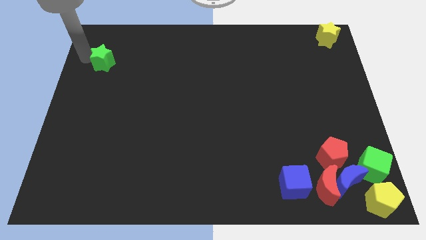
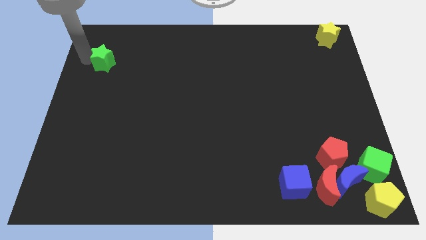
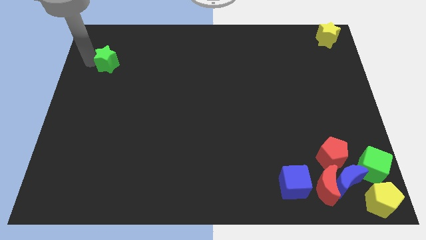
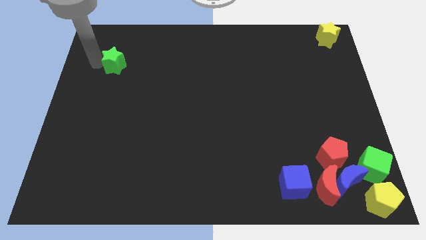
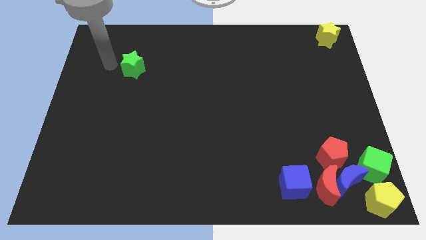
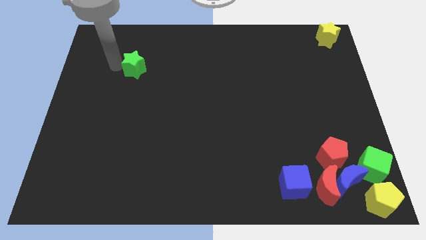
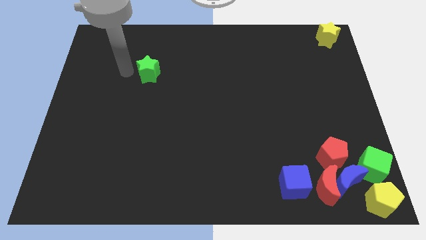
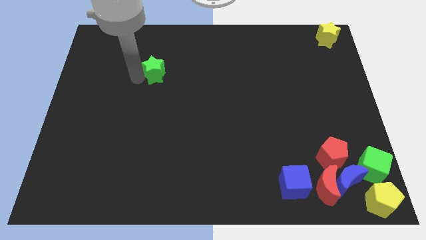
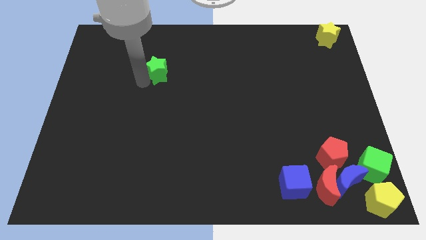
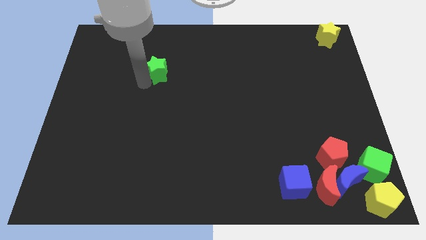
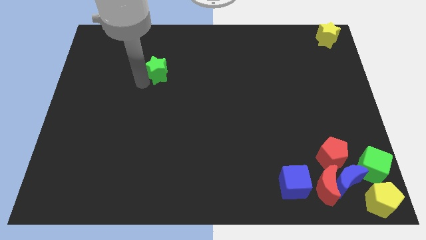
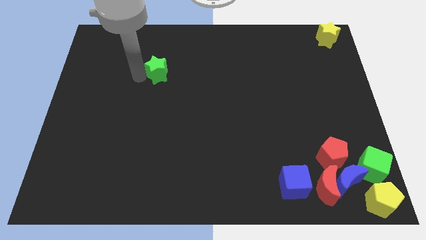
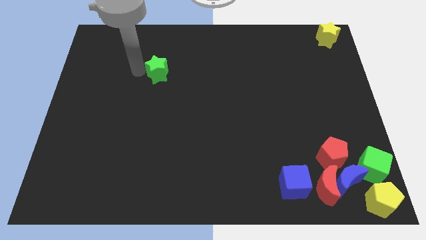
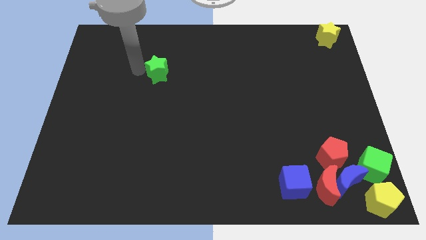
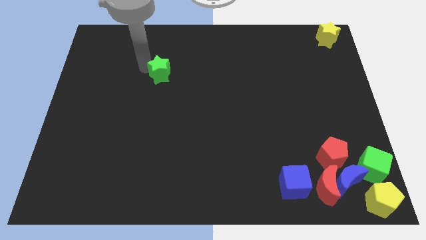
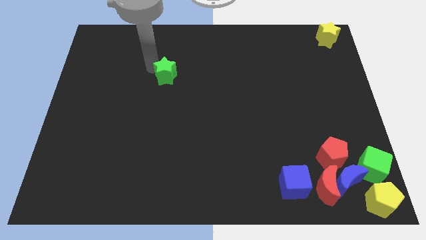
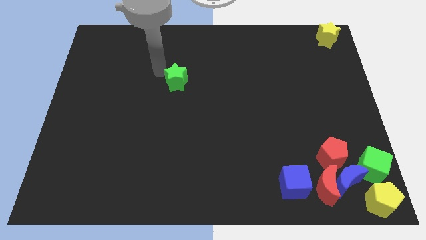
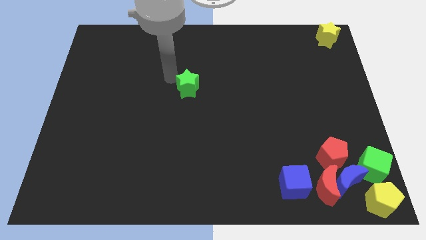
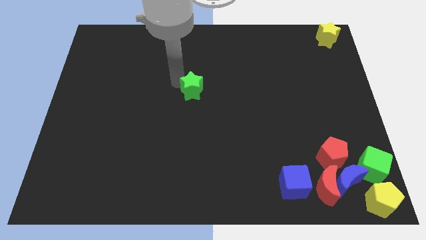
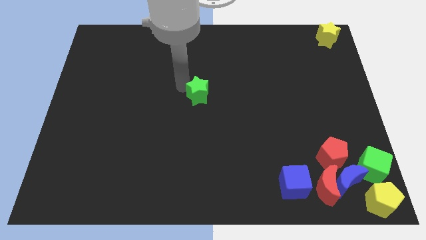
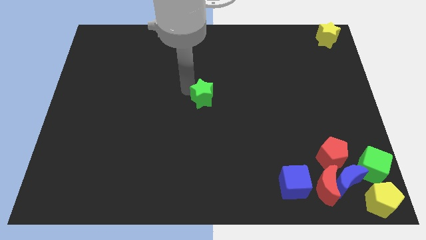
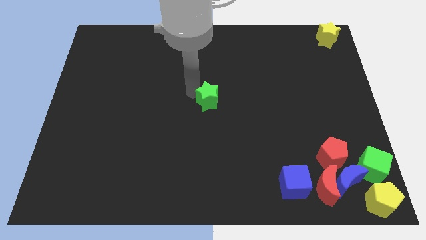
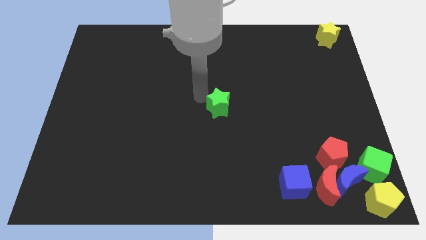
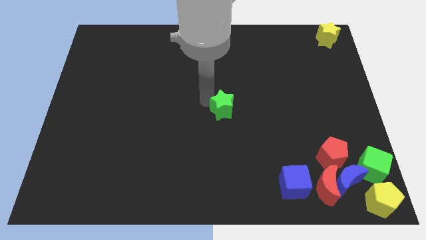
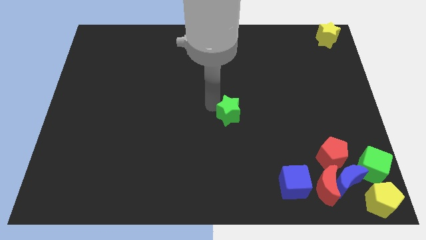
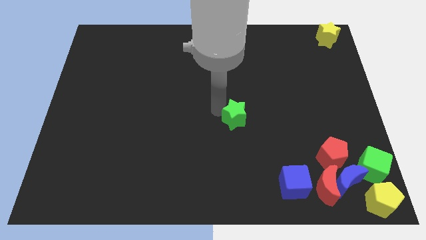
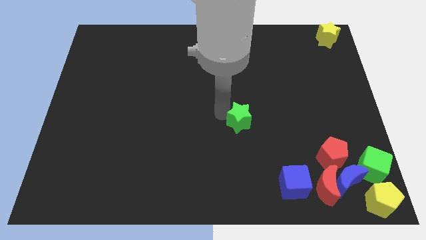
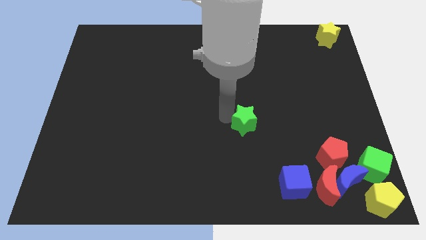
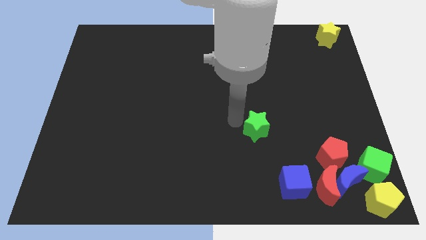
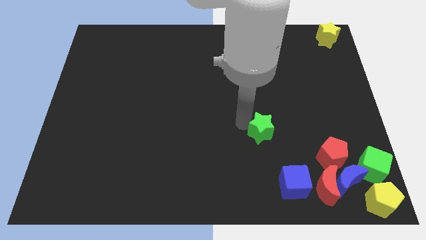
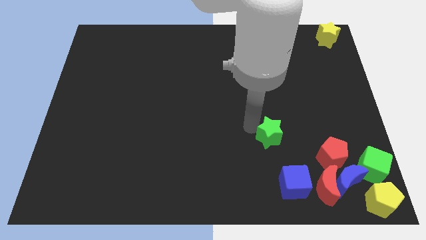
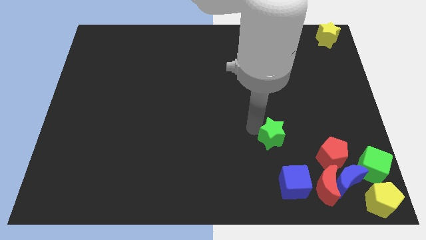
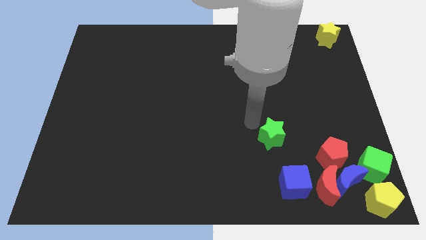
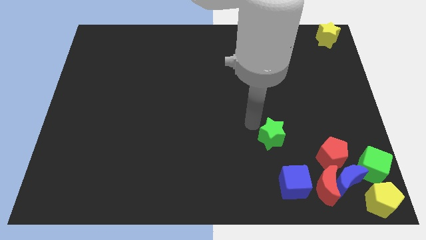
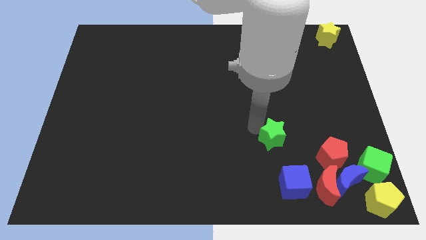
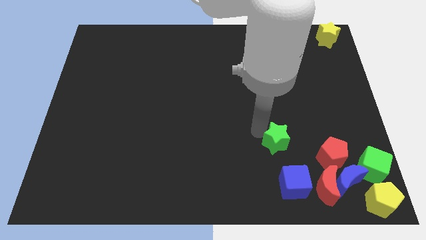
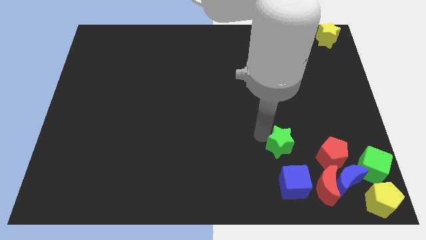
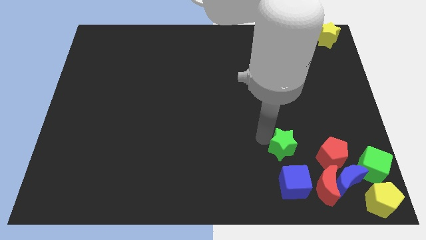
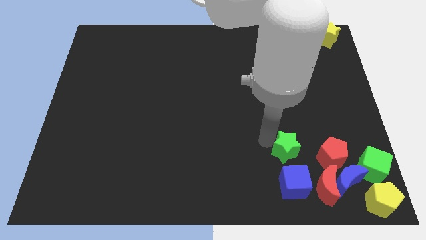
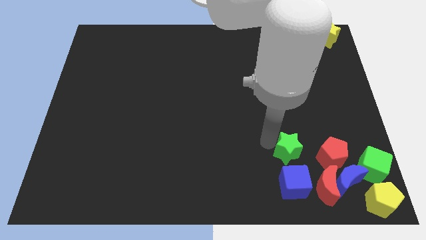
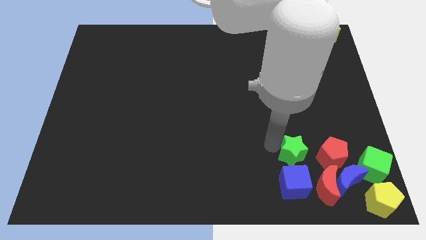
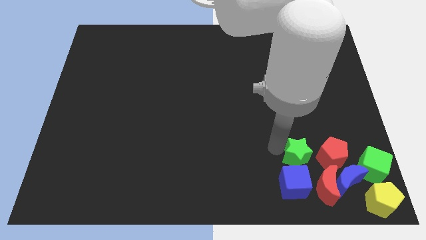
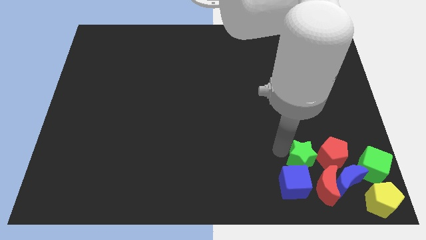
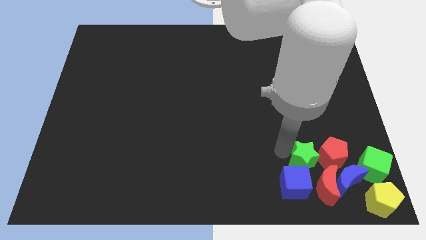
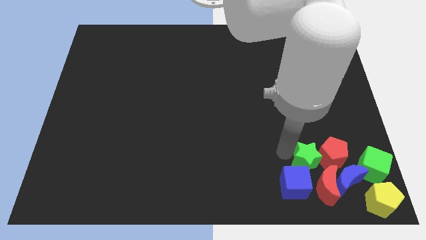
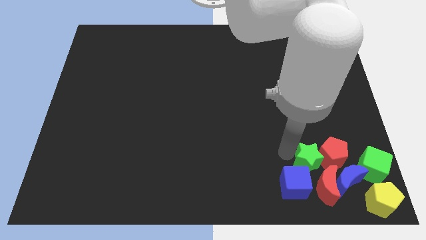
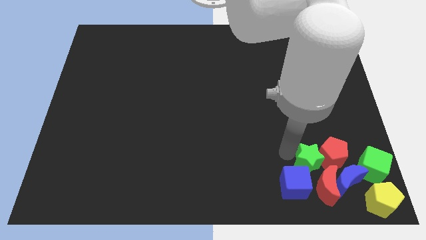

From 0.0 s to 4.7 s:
move the green star between the blue cube and red pentagon

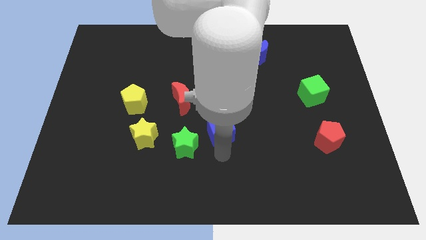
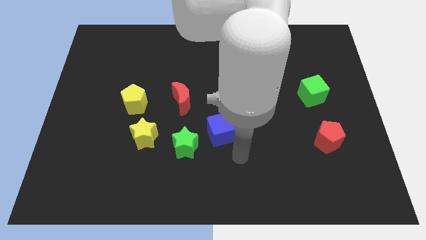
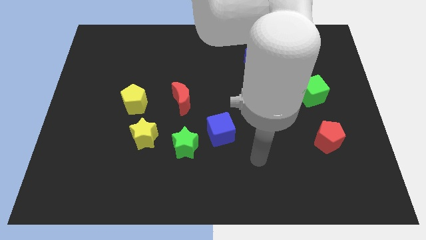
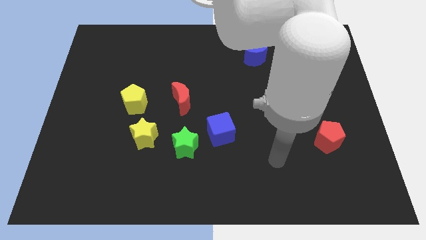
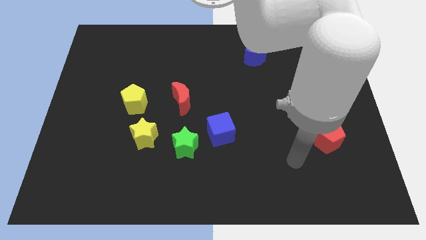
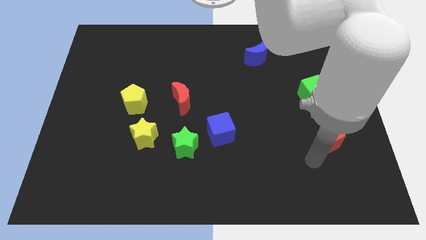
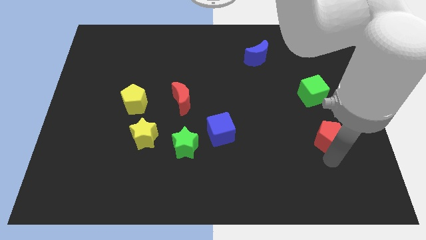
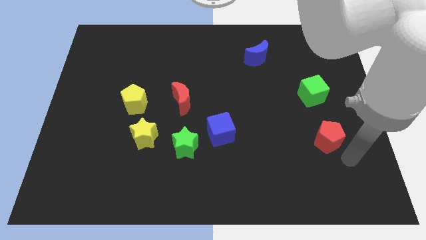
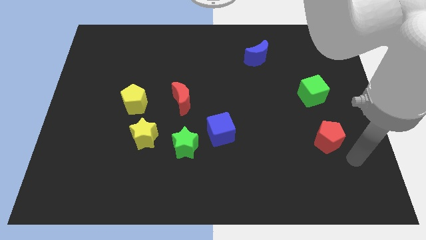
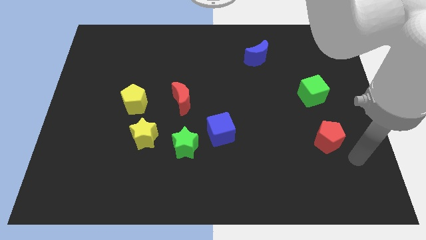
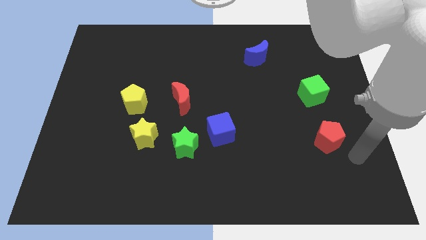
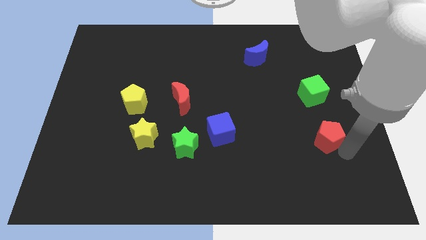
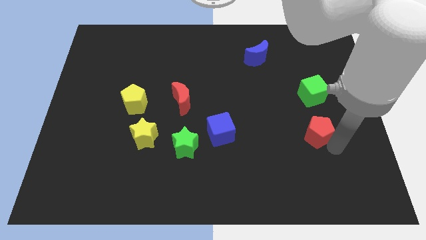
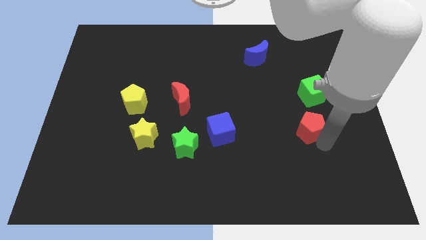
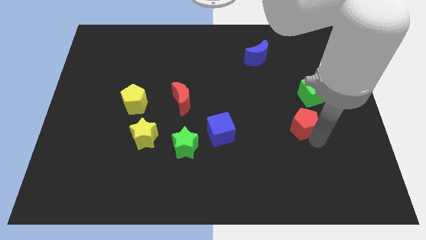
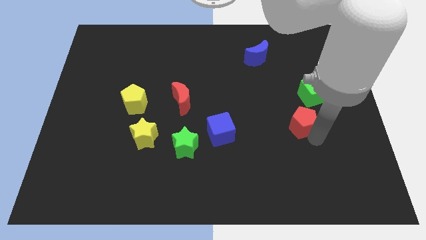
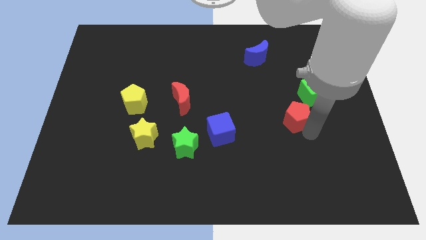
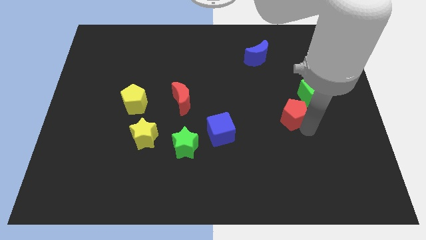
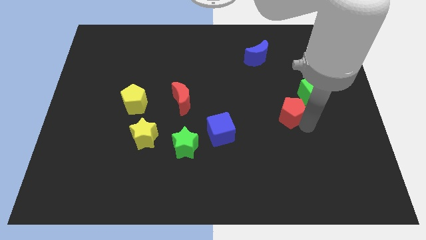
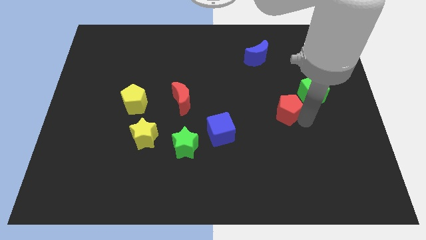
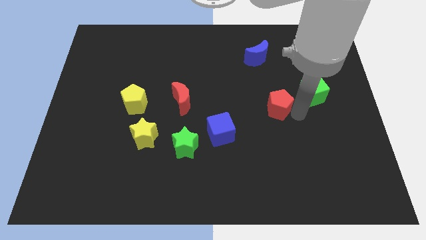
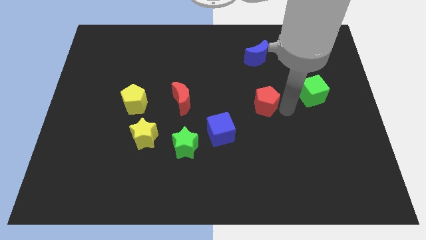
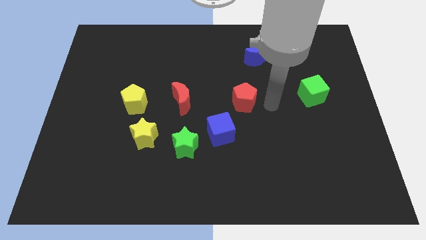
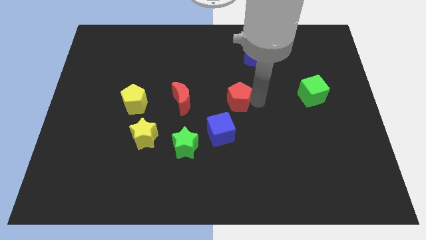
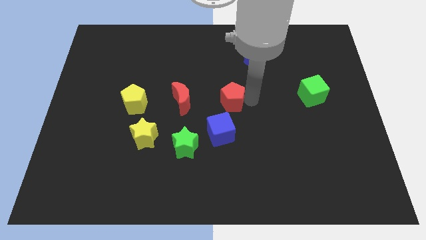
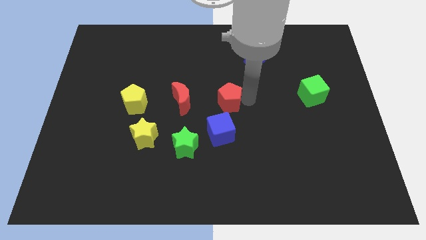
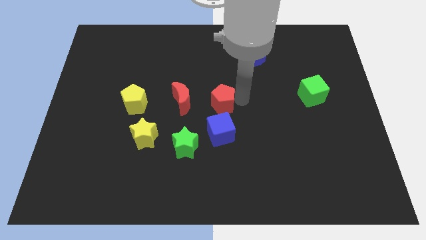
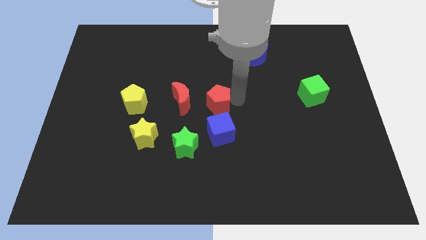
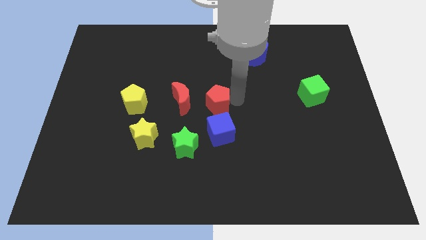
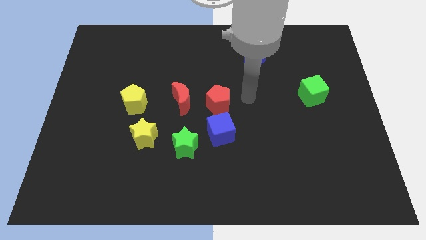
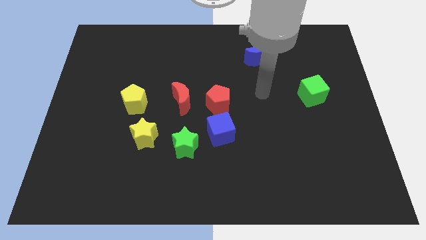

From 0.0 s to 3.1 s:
slide red pentagon to the center

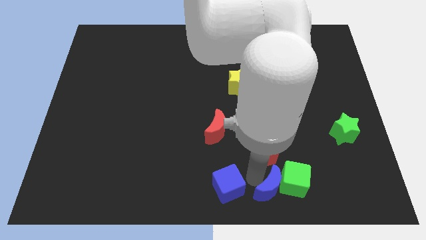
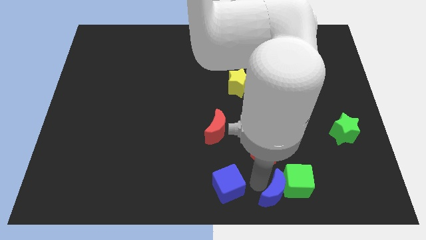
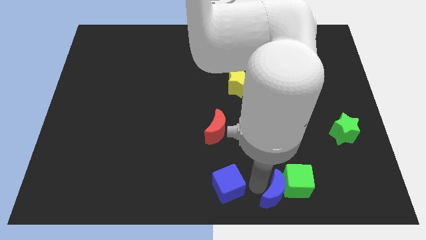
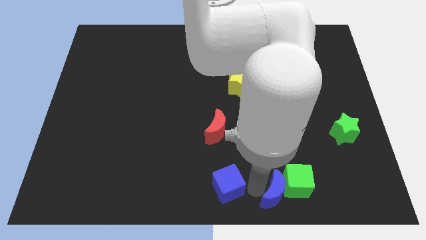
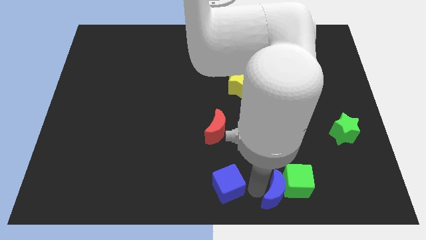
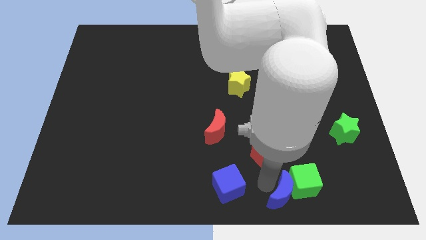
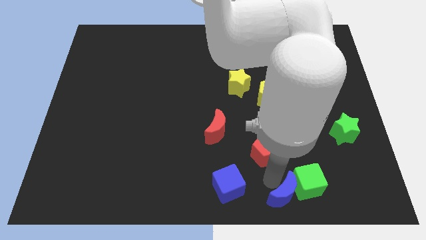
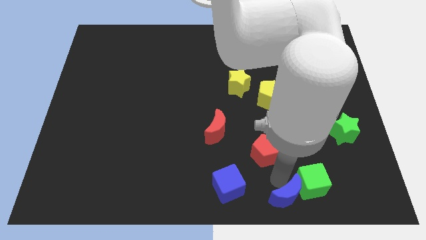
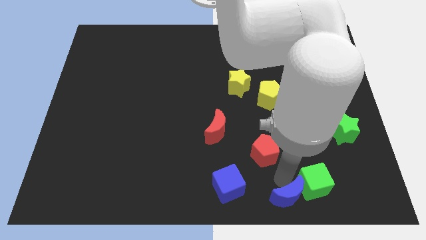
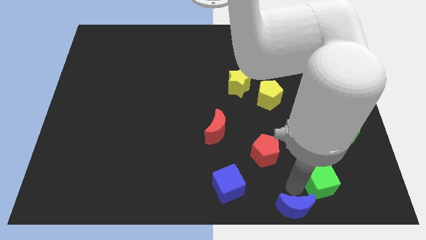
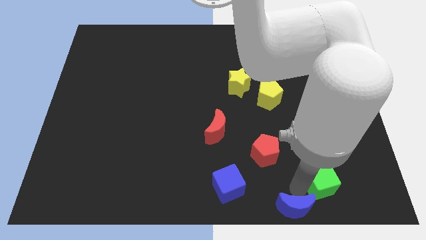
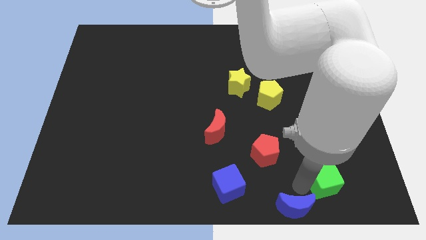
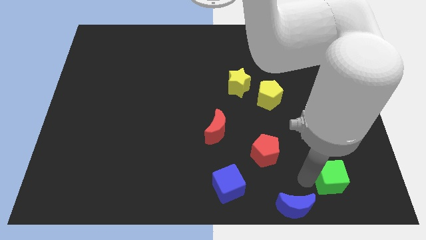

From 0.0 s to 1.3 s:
place the green cube in between the green star and blue moon
